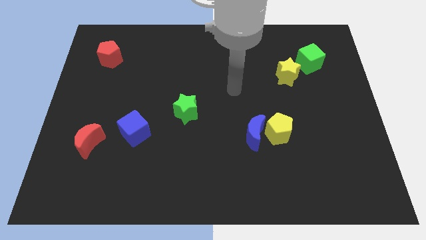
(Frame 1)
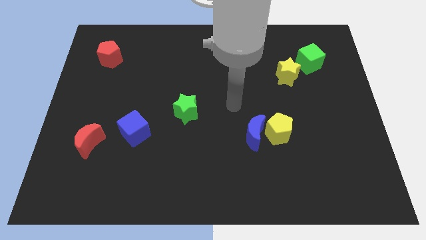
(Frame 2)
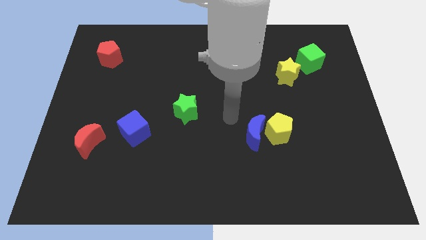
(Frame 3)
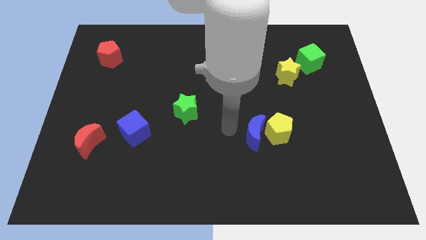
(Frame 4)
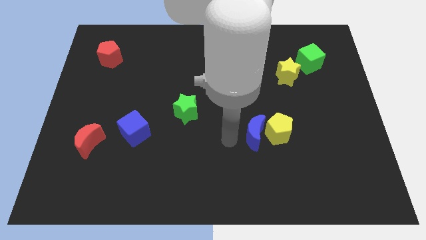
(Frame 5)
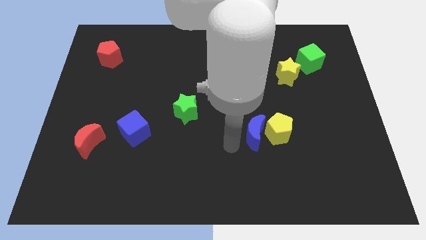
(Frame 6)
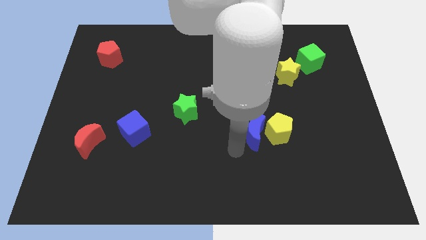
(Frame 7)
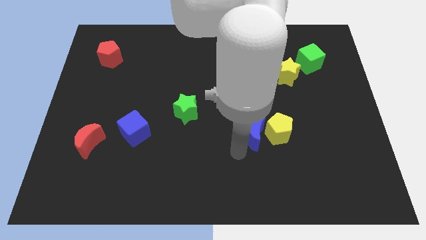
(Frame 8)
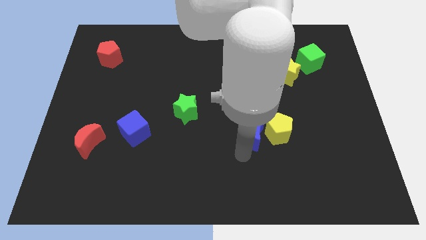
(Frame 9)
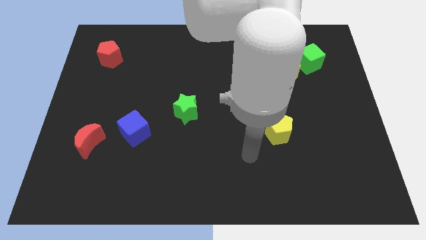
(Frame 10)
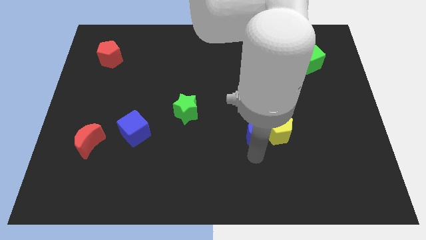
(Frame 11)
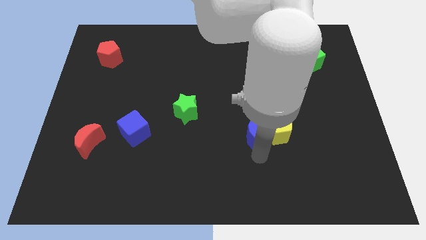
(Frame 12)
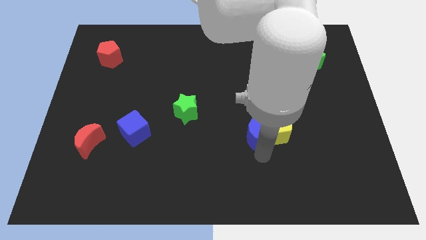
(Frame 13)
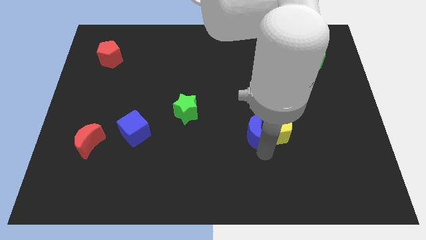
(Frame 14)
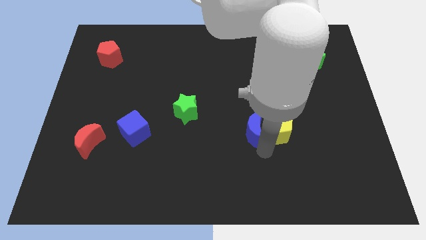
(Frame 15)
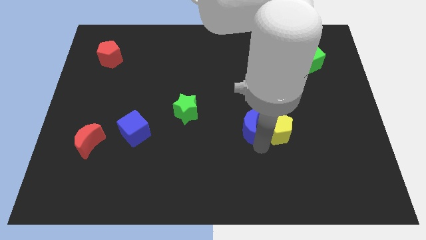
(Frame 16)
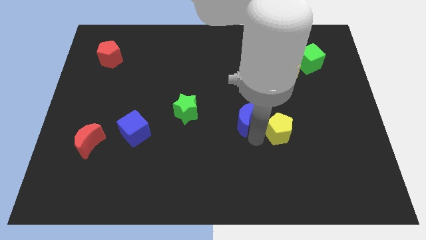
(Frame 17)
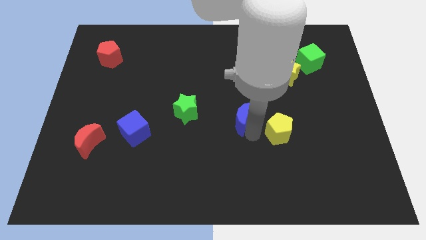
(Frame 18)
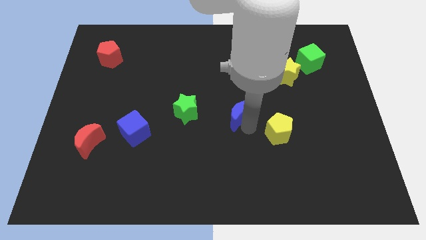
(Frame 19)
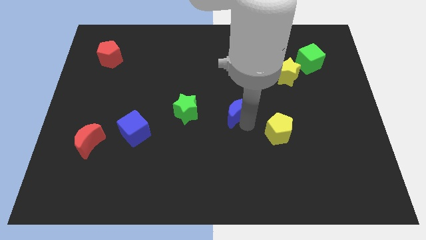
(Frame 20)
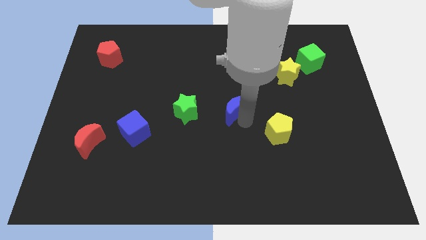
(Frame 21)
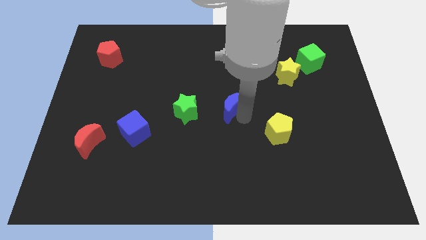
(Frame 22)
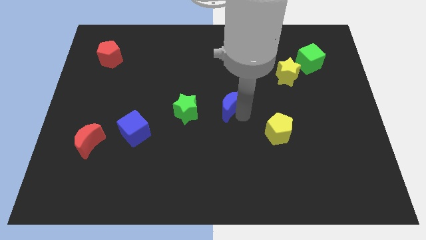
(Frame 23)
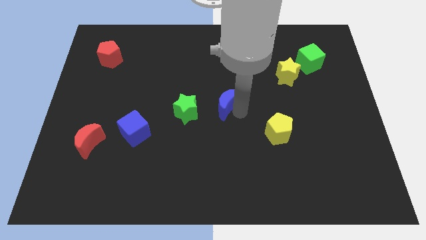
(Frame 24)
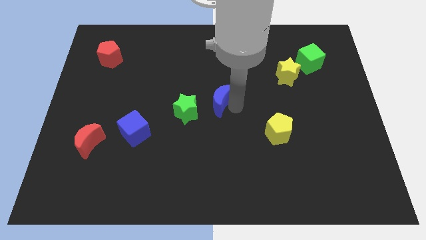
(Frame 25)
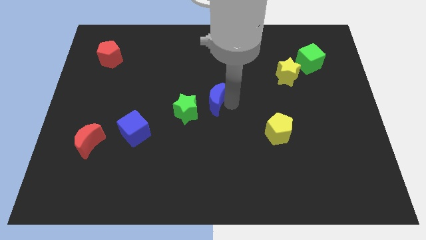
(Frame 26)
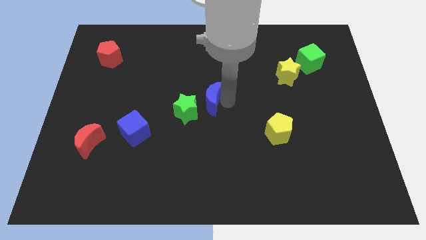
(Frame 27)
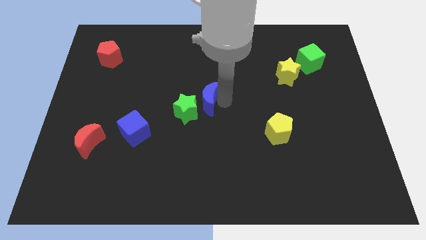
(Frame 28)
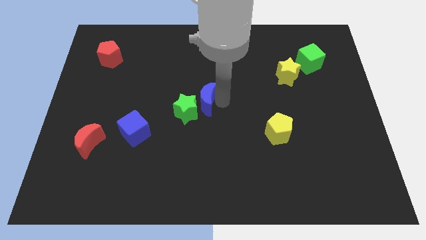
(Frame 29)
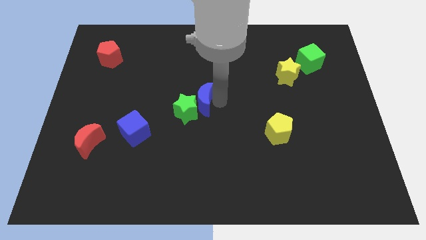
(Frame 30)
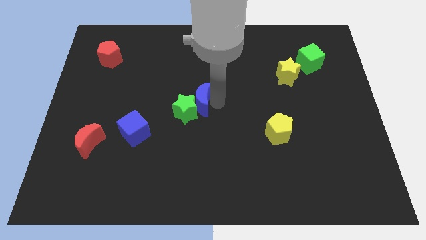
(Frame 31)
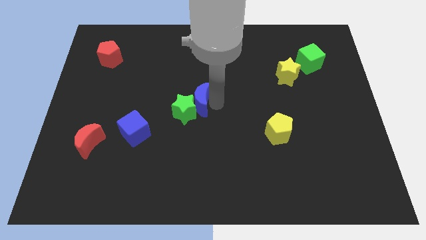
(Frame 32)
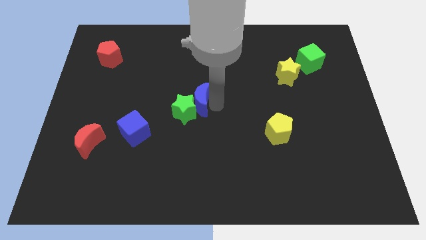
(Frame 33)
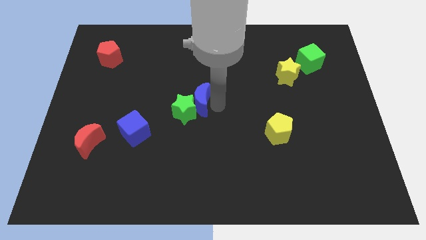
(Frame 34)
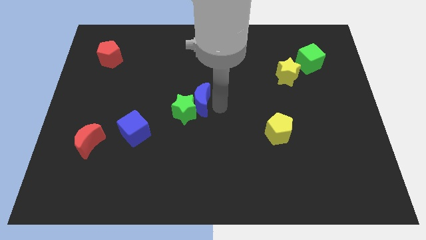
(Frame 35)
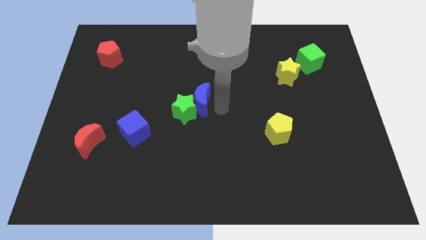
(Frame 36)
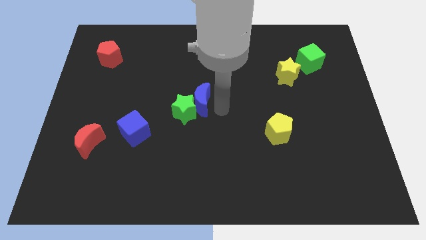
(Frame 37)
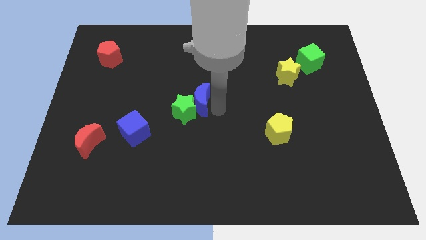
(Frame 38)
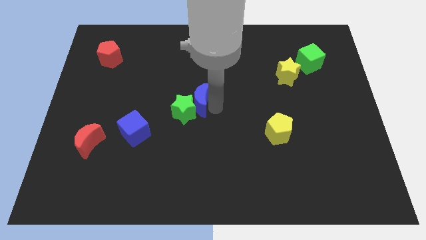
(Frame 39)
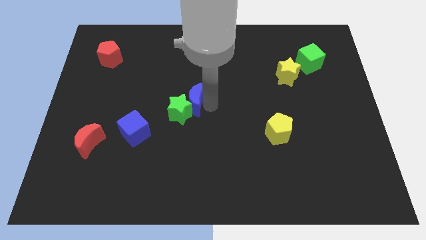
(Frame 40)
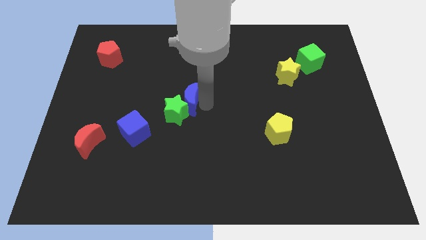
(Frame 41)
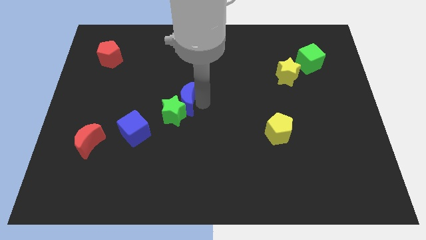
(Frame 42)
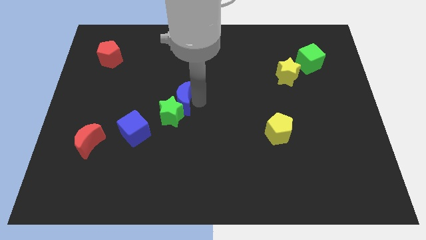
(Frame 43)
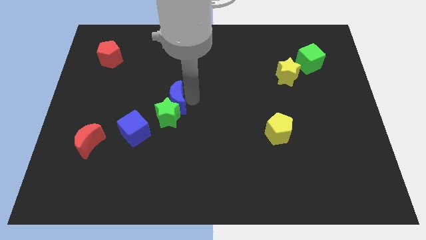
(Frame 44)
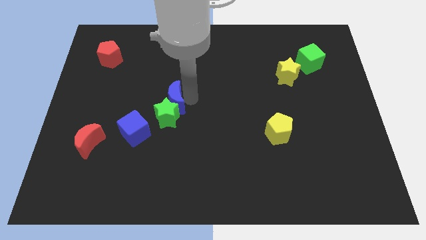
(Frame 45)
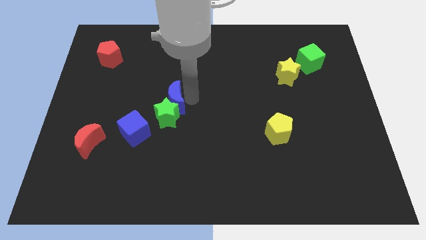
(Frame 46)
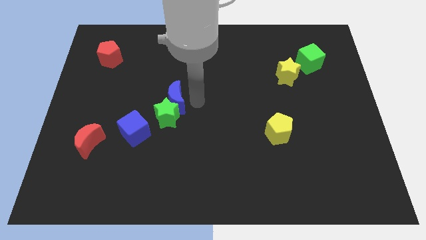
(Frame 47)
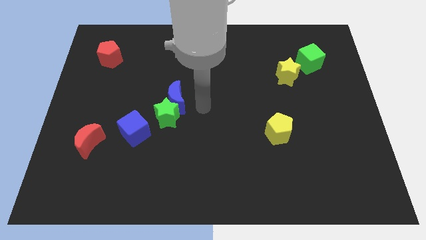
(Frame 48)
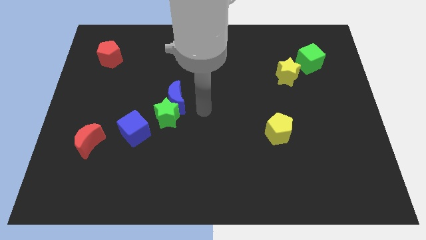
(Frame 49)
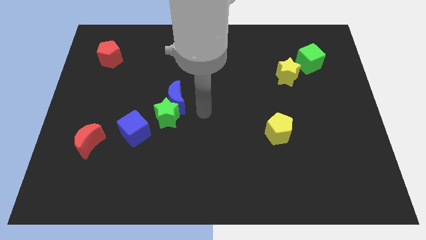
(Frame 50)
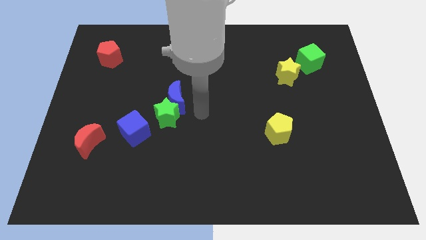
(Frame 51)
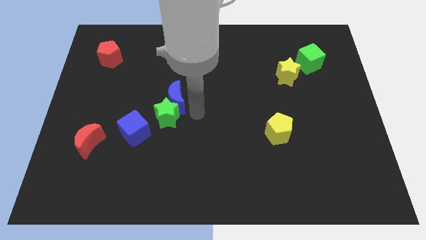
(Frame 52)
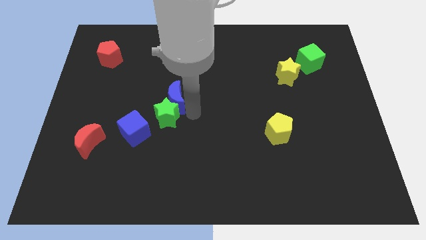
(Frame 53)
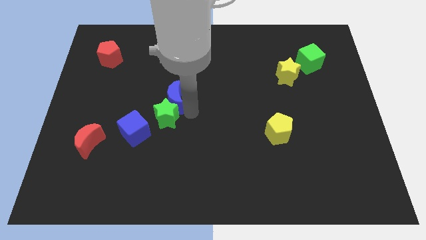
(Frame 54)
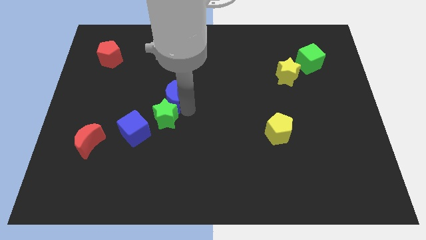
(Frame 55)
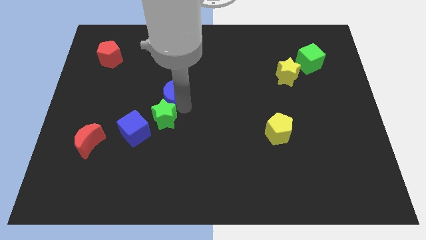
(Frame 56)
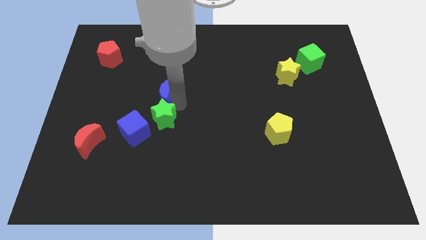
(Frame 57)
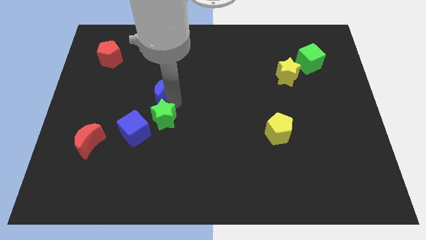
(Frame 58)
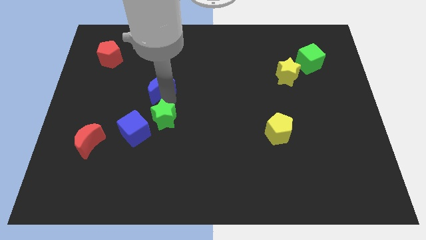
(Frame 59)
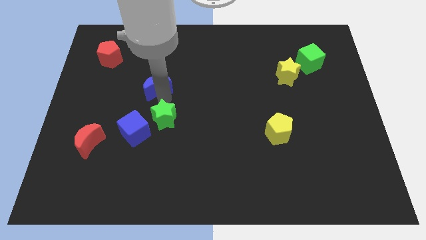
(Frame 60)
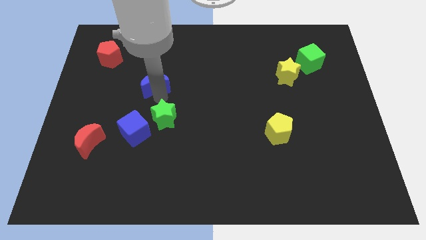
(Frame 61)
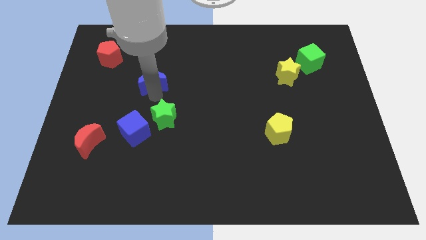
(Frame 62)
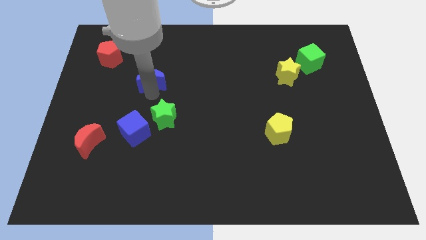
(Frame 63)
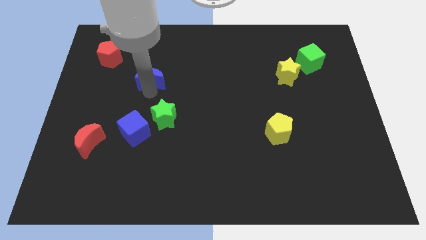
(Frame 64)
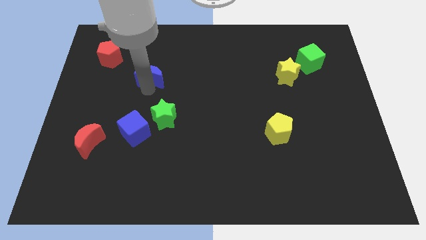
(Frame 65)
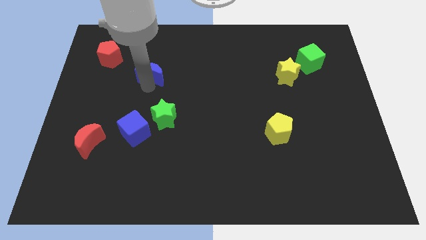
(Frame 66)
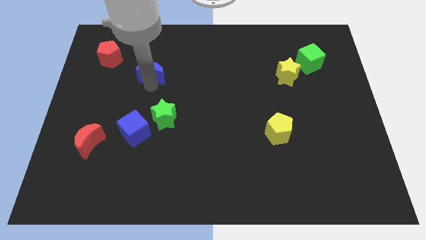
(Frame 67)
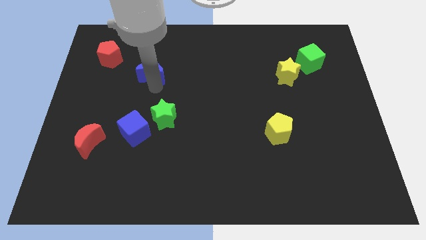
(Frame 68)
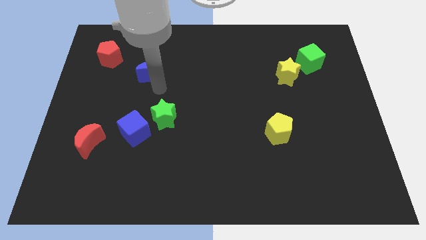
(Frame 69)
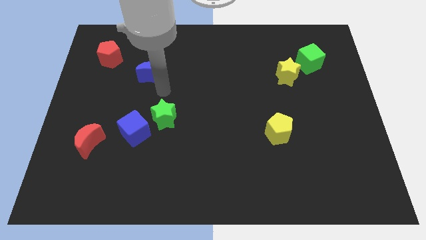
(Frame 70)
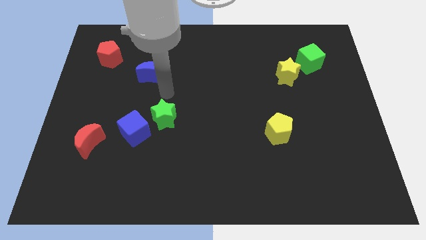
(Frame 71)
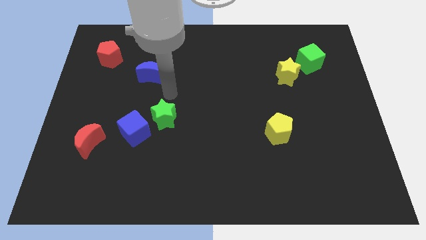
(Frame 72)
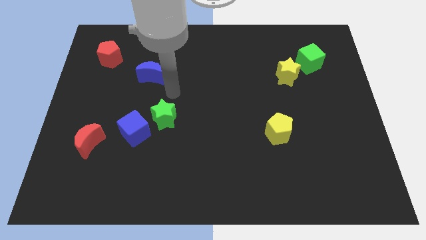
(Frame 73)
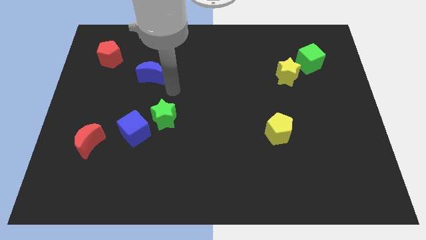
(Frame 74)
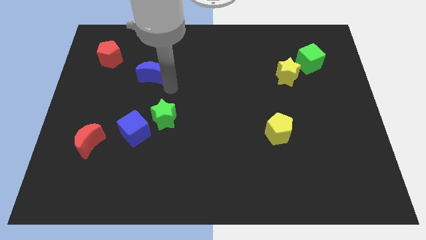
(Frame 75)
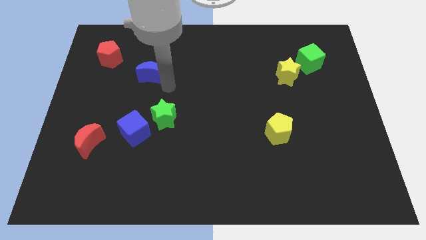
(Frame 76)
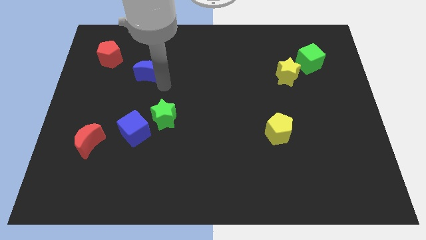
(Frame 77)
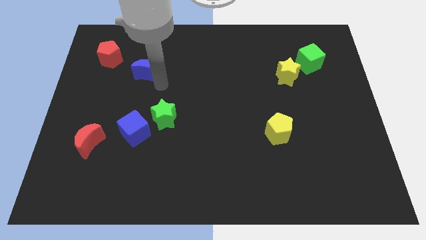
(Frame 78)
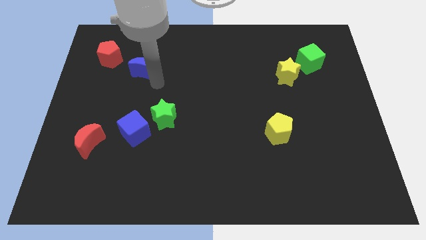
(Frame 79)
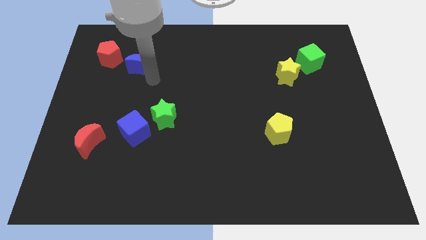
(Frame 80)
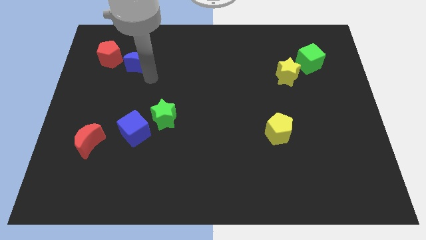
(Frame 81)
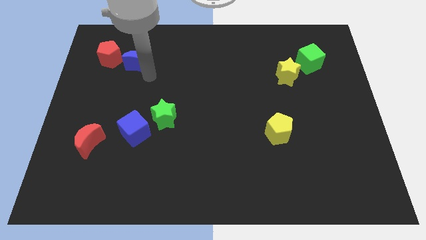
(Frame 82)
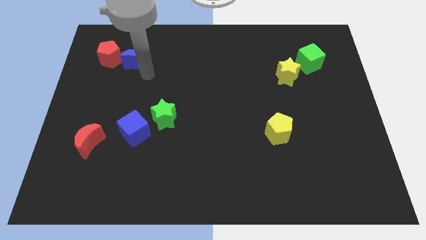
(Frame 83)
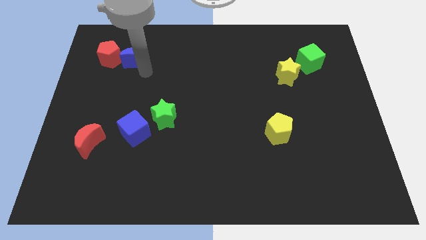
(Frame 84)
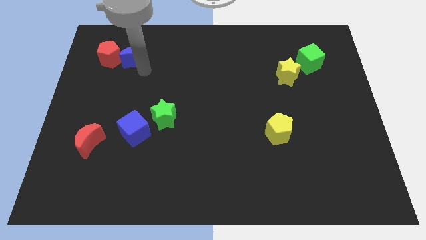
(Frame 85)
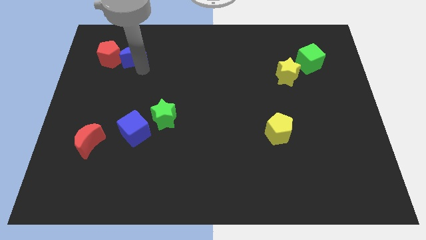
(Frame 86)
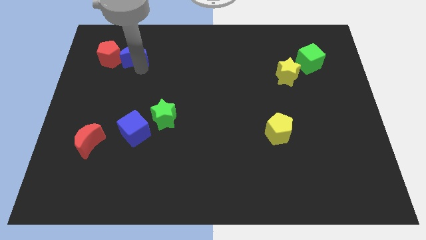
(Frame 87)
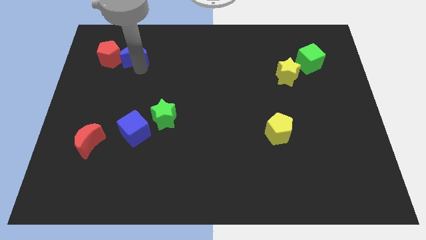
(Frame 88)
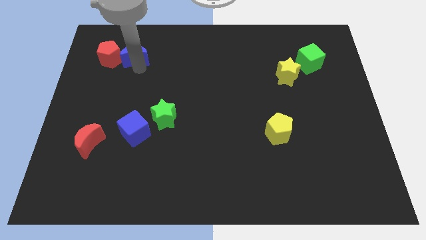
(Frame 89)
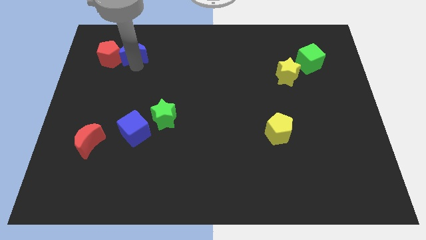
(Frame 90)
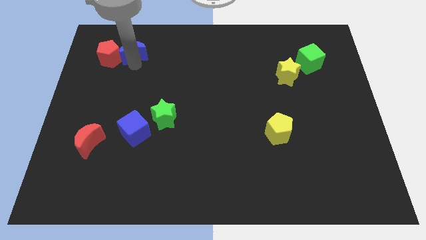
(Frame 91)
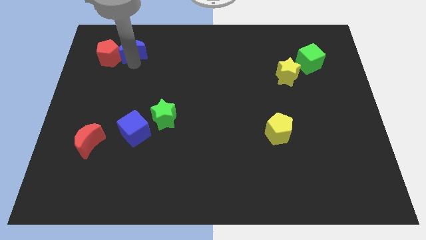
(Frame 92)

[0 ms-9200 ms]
slide the blue moon close to the red pentagon
